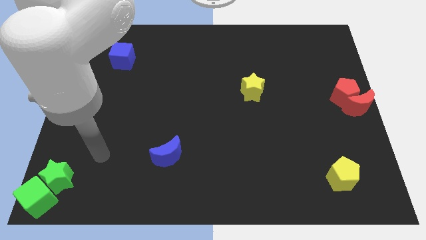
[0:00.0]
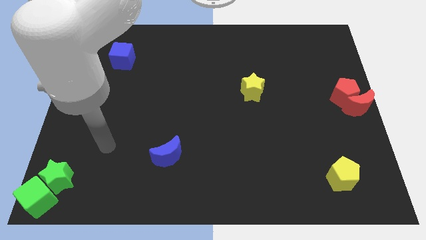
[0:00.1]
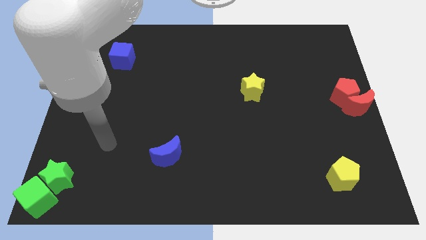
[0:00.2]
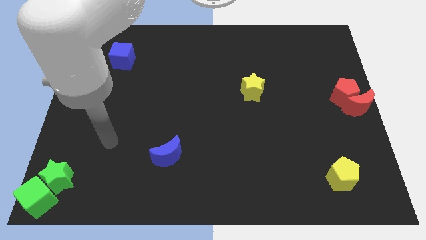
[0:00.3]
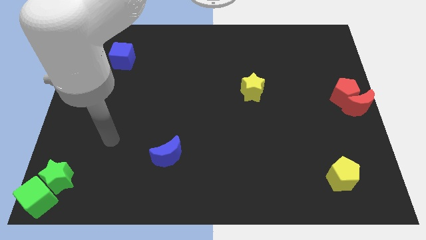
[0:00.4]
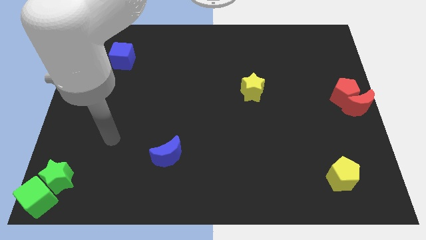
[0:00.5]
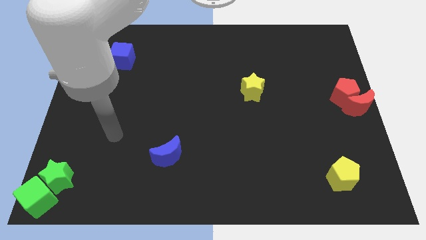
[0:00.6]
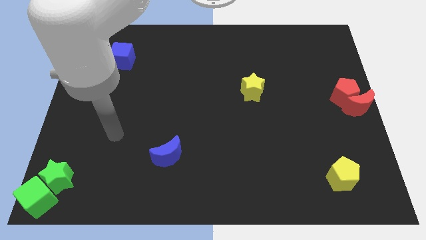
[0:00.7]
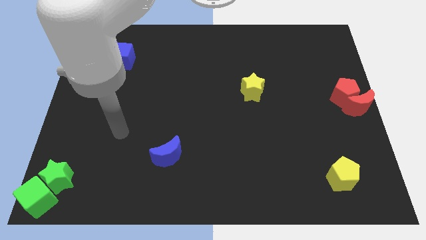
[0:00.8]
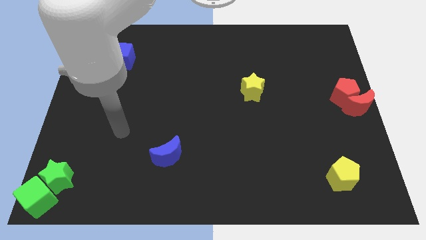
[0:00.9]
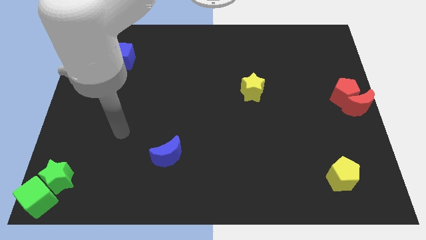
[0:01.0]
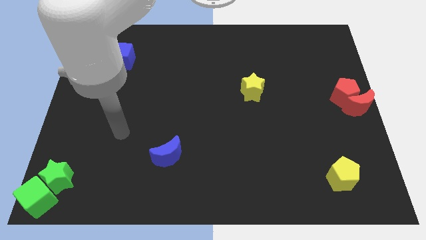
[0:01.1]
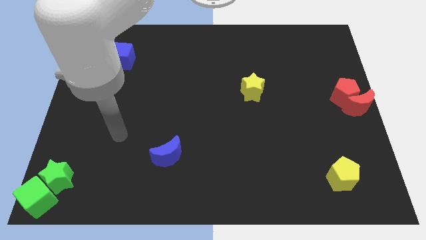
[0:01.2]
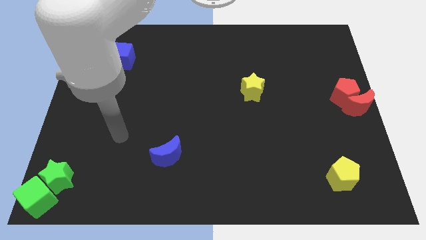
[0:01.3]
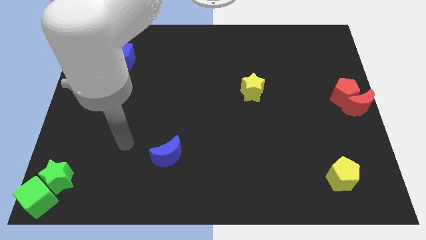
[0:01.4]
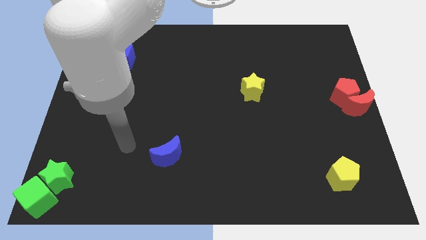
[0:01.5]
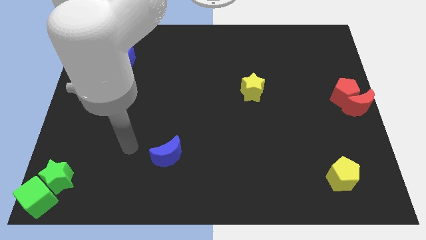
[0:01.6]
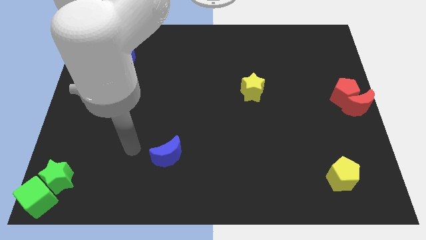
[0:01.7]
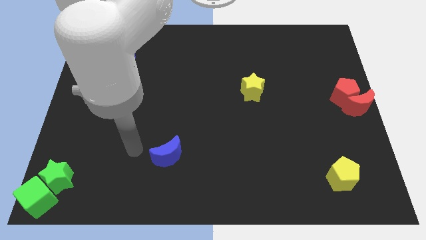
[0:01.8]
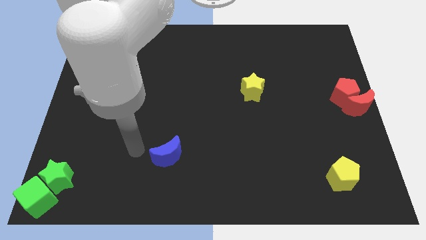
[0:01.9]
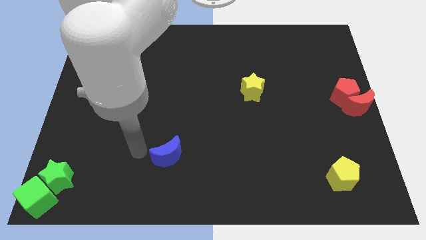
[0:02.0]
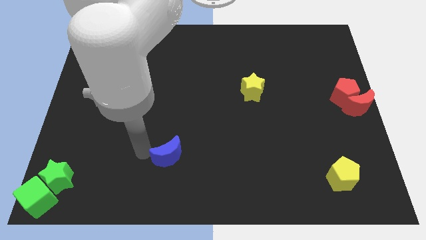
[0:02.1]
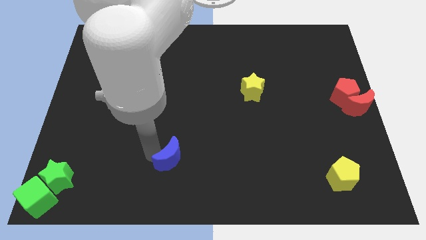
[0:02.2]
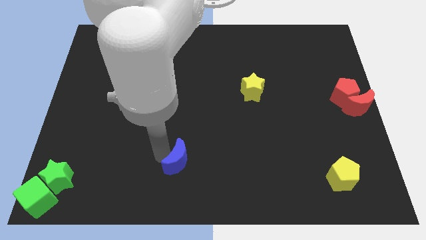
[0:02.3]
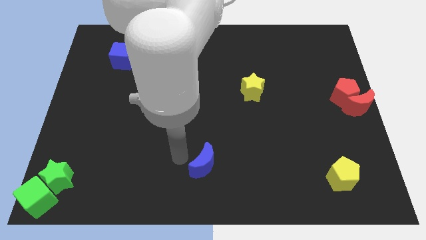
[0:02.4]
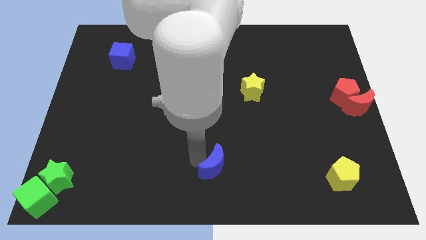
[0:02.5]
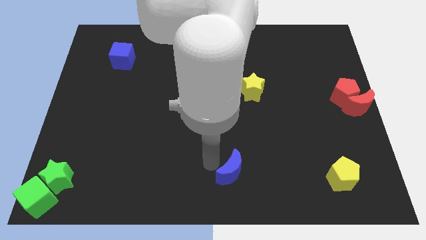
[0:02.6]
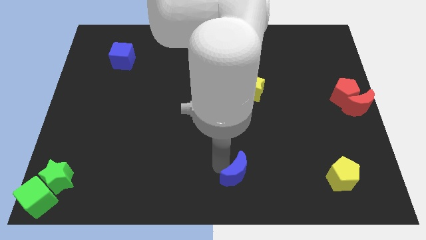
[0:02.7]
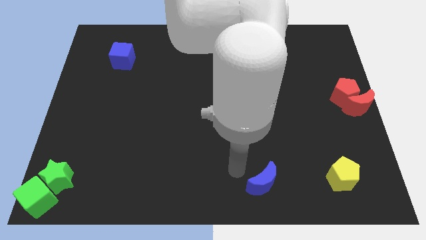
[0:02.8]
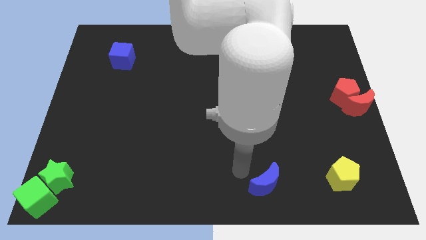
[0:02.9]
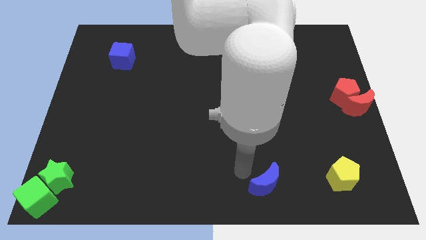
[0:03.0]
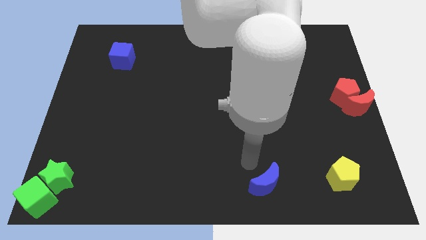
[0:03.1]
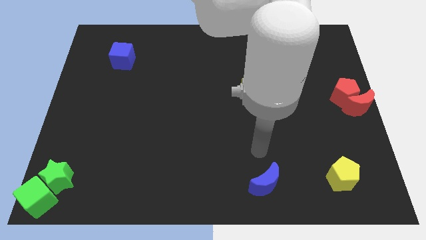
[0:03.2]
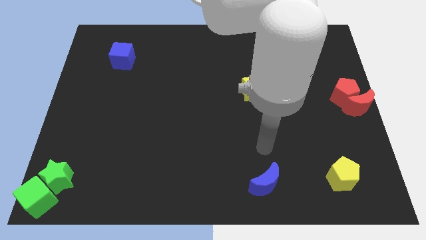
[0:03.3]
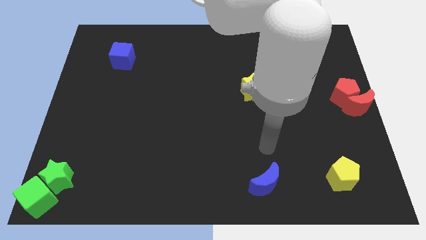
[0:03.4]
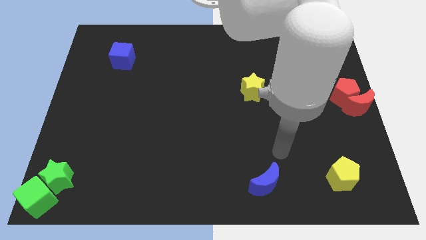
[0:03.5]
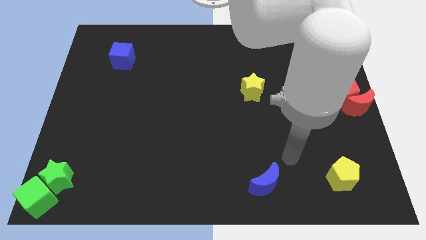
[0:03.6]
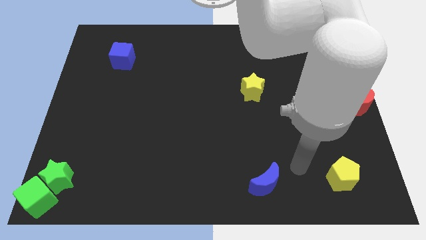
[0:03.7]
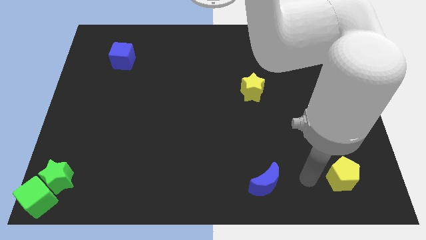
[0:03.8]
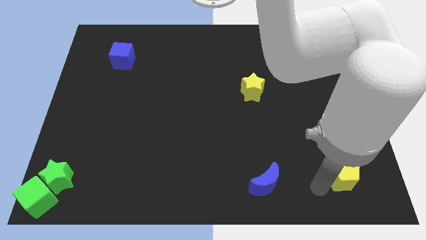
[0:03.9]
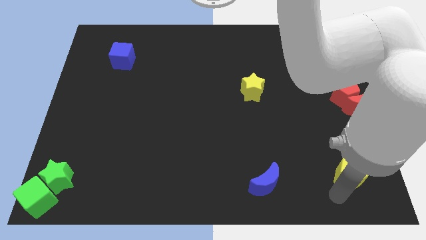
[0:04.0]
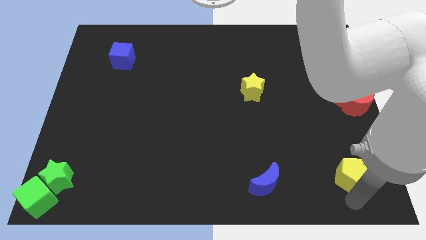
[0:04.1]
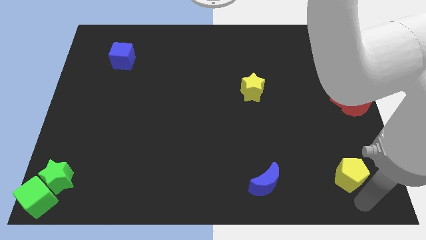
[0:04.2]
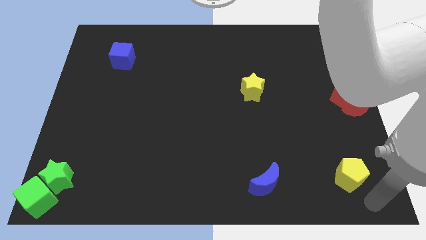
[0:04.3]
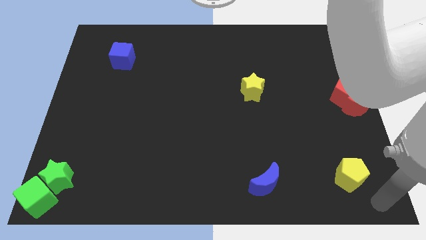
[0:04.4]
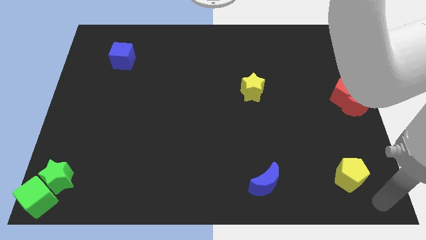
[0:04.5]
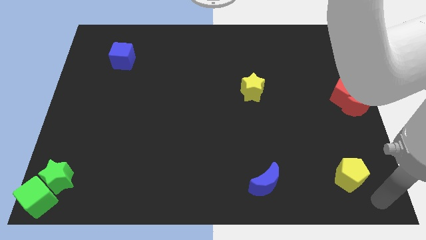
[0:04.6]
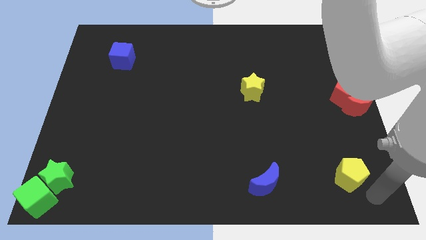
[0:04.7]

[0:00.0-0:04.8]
place the blue crescent vertically below the yellow star

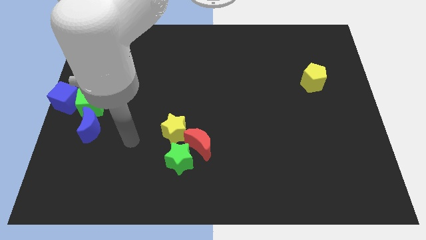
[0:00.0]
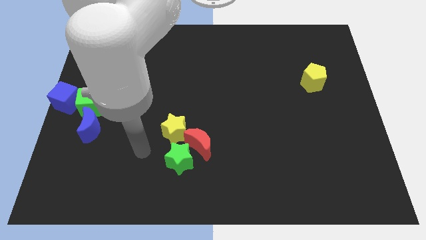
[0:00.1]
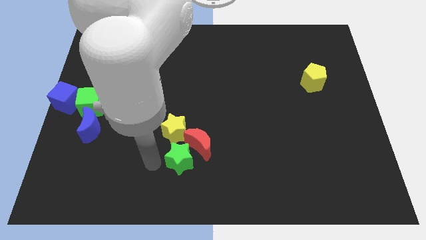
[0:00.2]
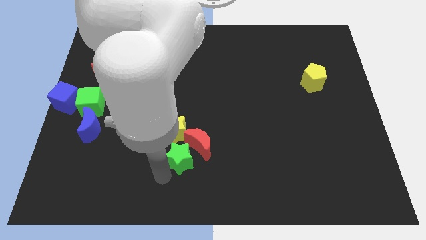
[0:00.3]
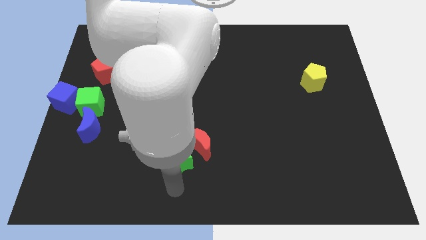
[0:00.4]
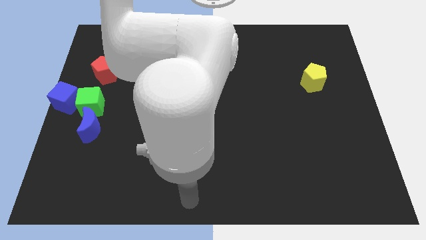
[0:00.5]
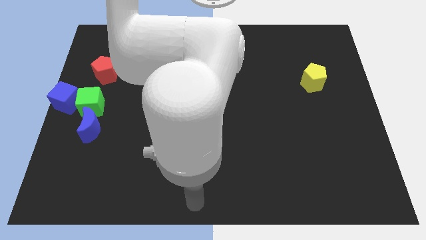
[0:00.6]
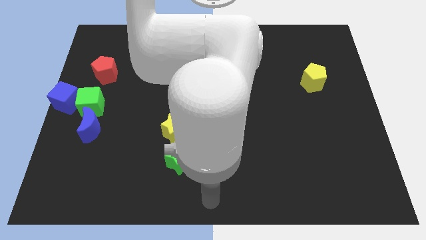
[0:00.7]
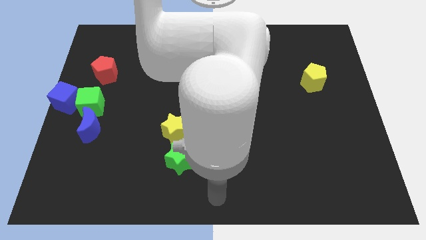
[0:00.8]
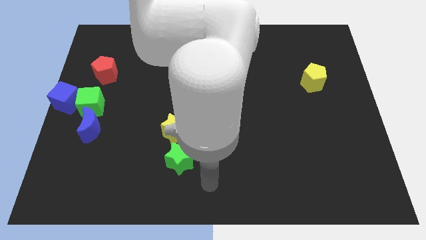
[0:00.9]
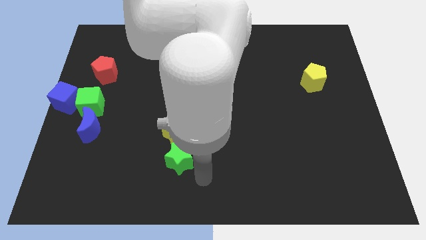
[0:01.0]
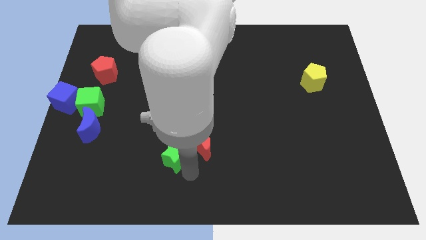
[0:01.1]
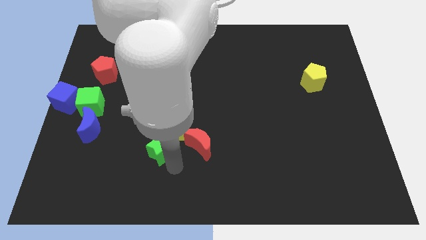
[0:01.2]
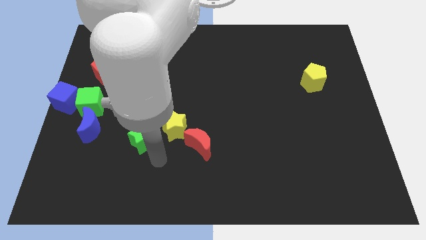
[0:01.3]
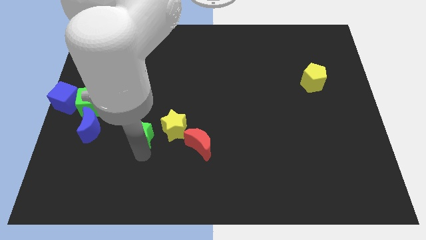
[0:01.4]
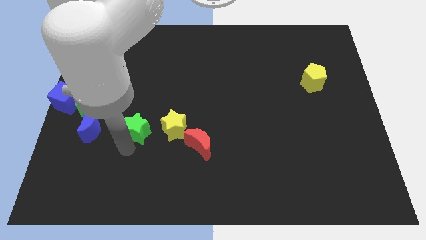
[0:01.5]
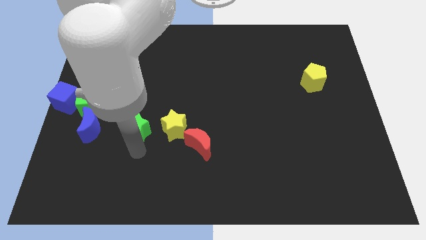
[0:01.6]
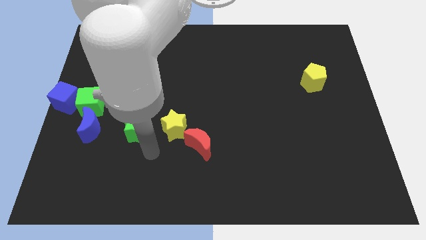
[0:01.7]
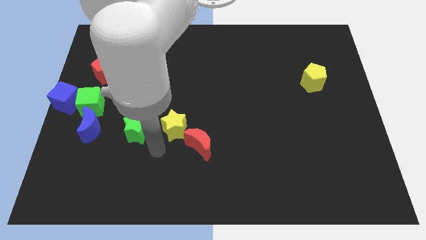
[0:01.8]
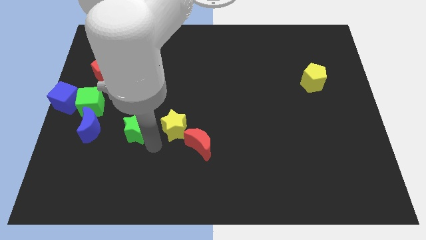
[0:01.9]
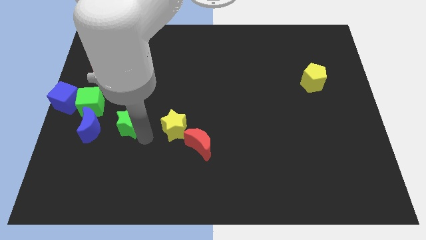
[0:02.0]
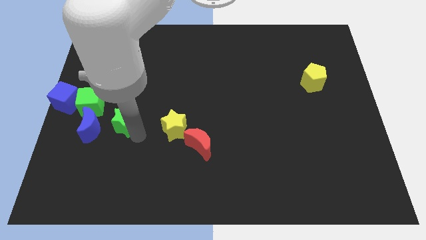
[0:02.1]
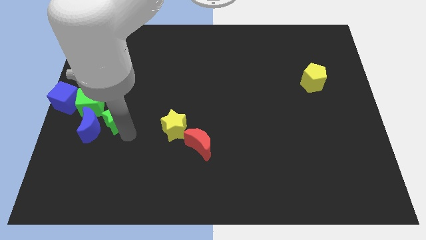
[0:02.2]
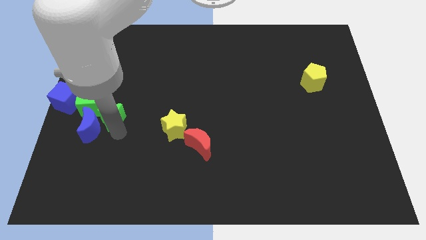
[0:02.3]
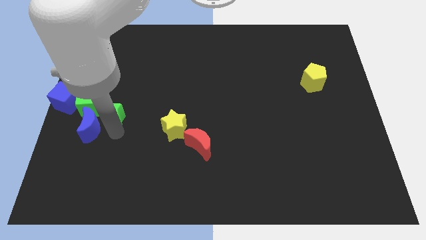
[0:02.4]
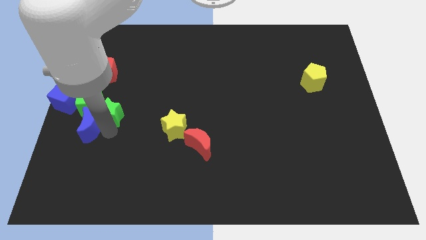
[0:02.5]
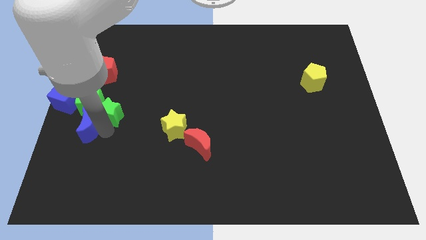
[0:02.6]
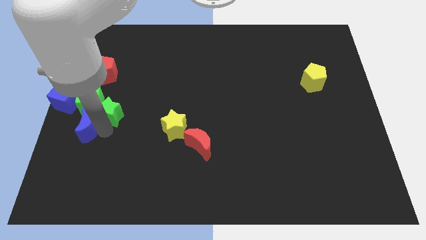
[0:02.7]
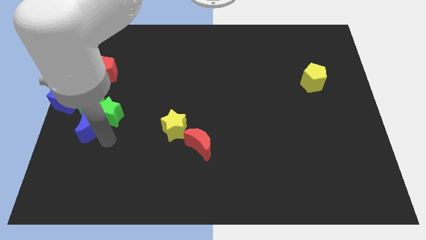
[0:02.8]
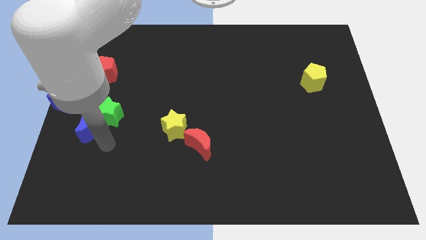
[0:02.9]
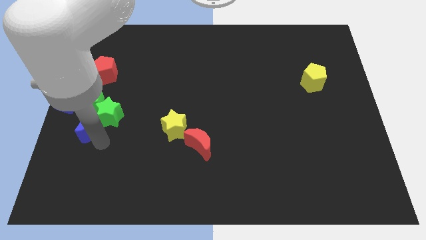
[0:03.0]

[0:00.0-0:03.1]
move the green star into the group of object

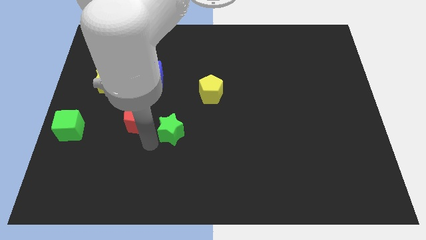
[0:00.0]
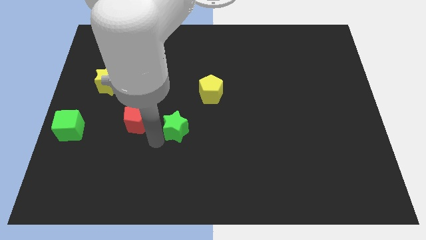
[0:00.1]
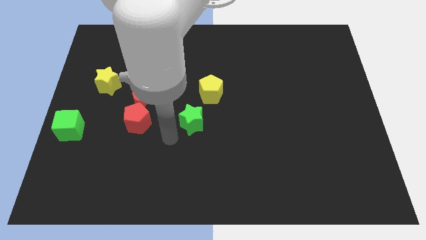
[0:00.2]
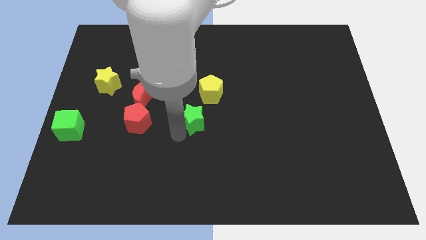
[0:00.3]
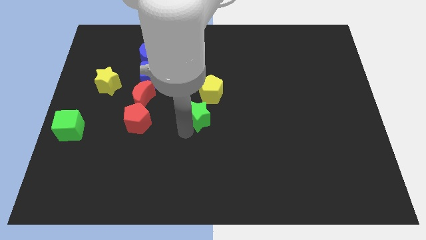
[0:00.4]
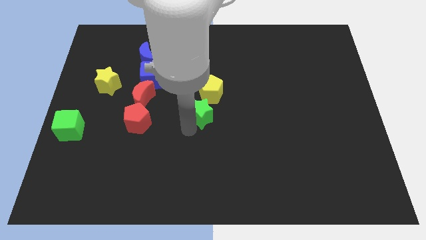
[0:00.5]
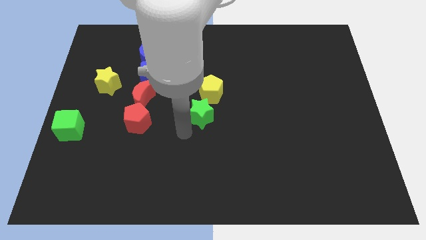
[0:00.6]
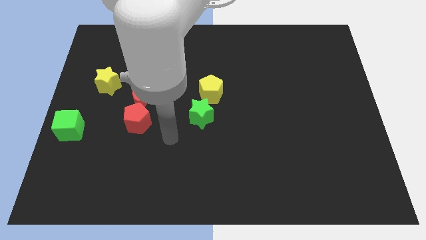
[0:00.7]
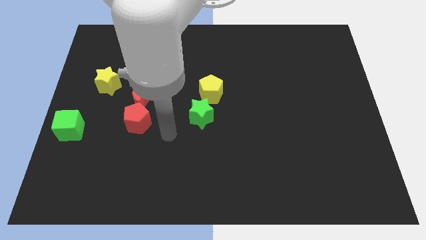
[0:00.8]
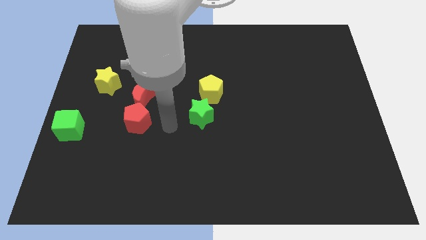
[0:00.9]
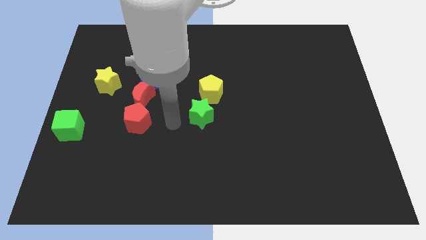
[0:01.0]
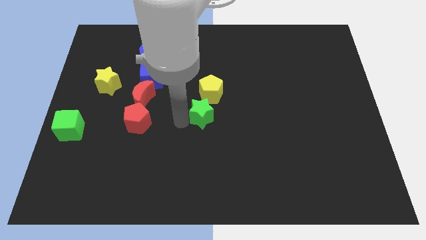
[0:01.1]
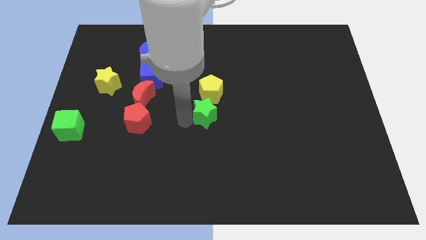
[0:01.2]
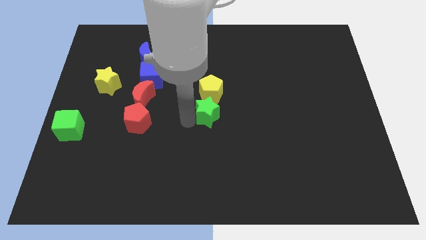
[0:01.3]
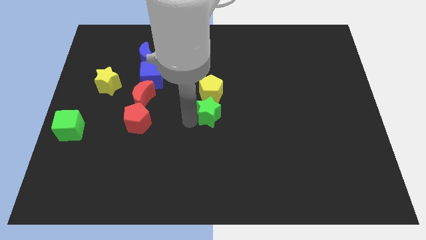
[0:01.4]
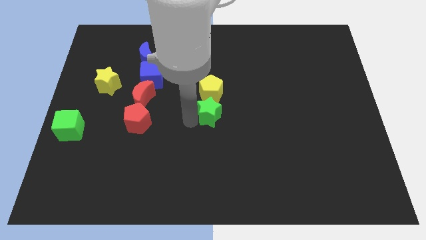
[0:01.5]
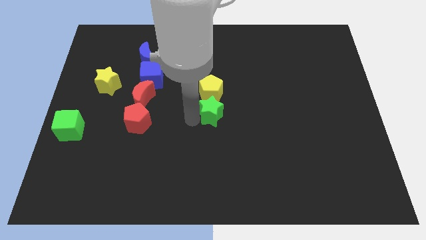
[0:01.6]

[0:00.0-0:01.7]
place the green star below the yellow pentagon
